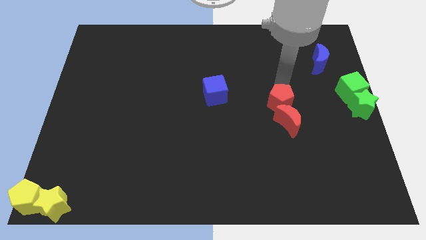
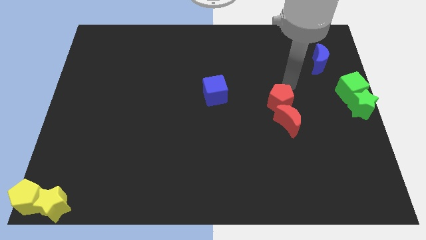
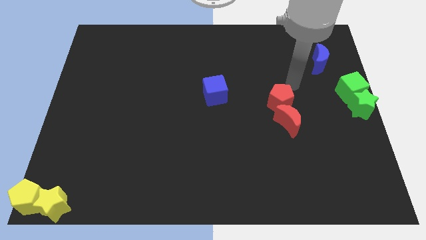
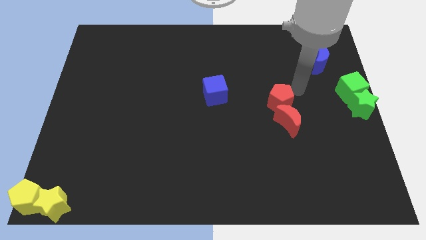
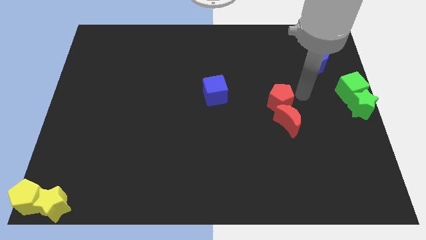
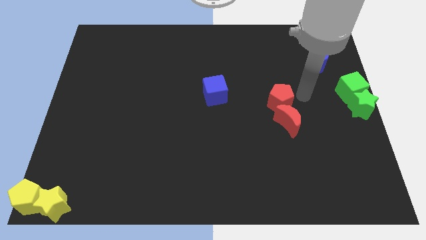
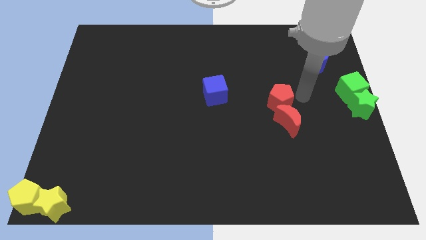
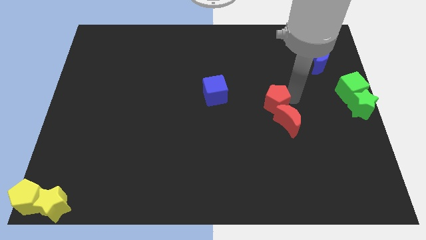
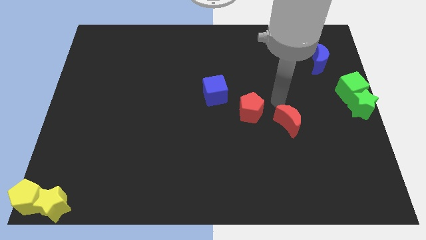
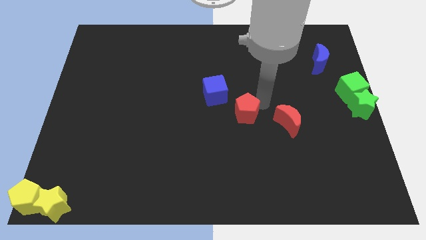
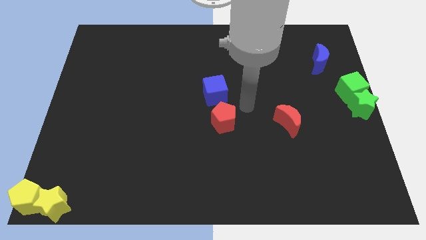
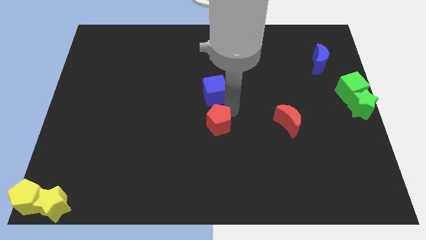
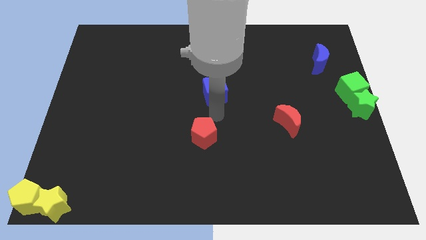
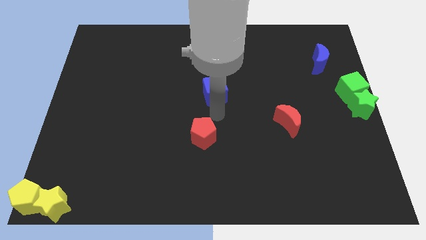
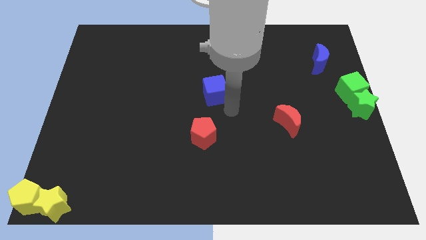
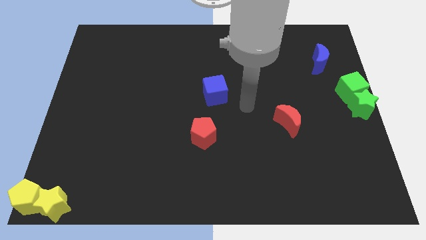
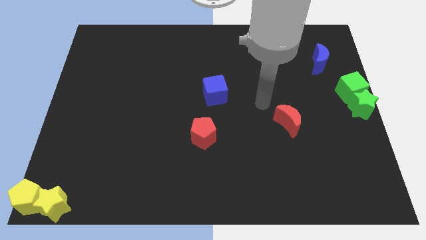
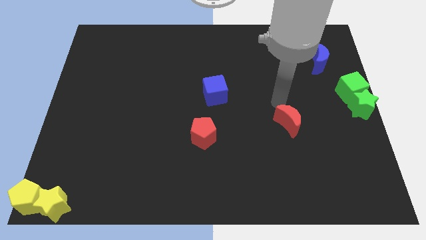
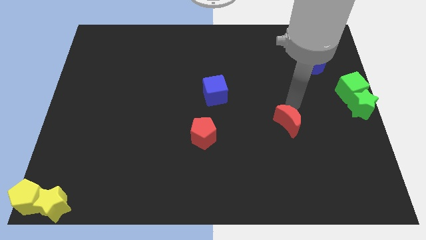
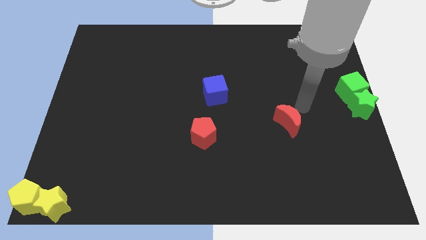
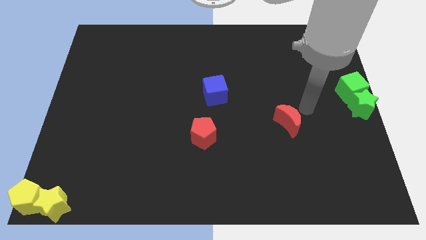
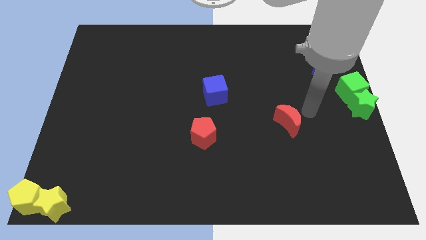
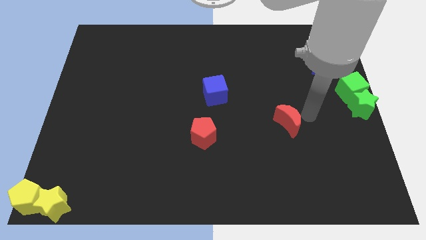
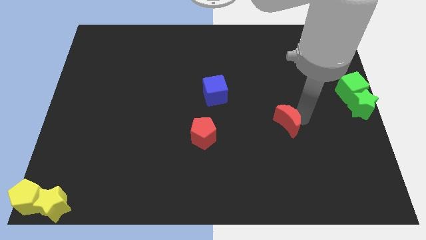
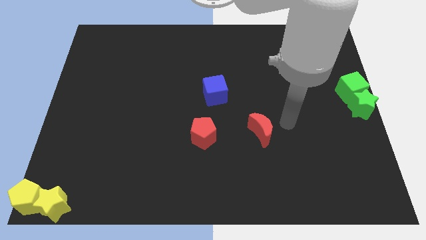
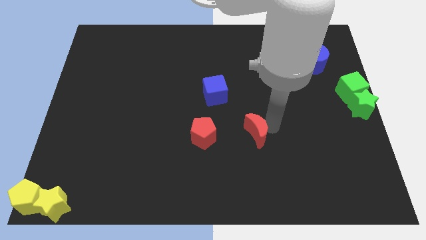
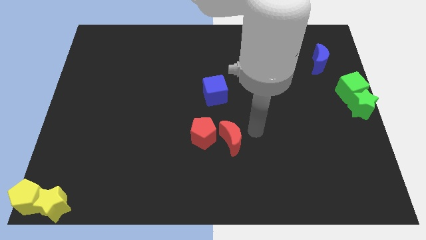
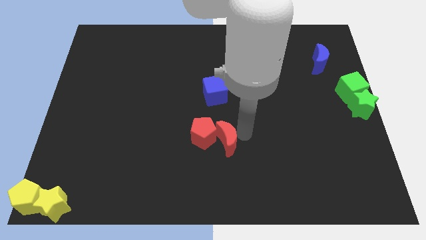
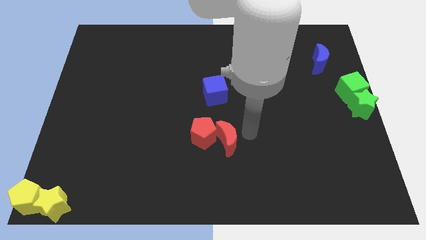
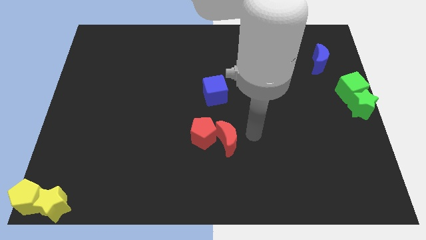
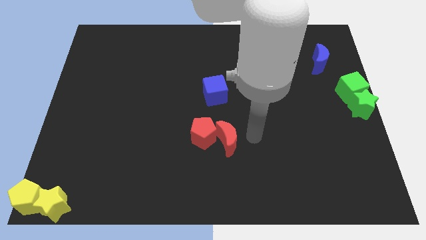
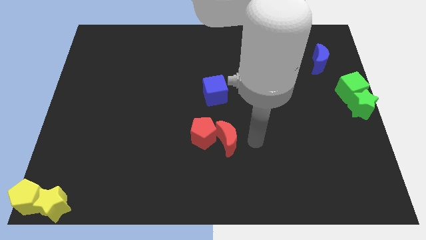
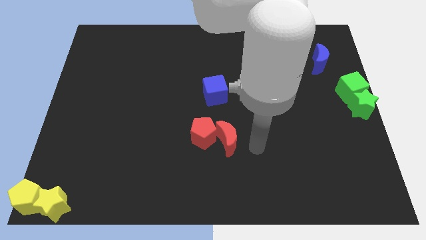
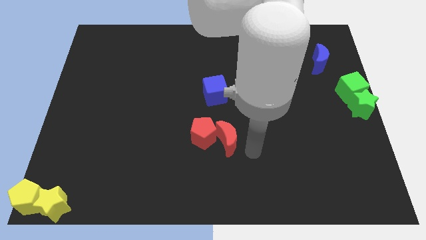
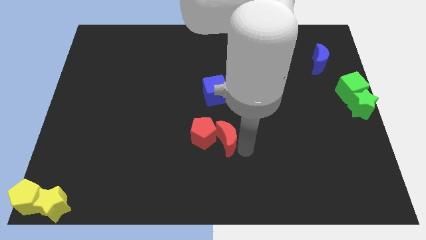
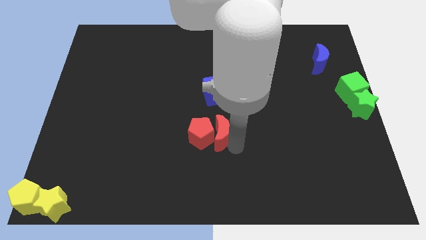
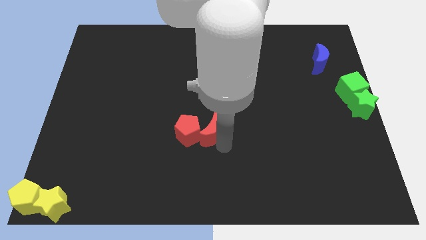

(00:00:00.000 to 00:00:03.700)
place red pentagon and red moon vertical to blue cube

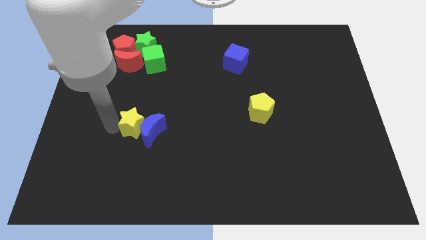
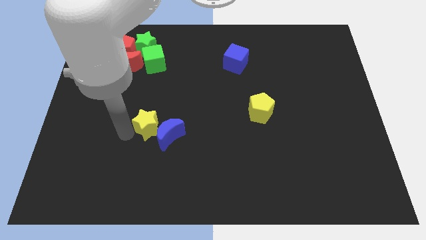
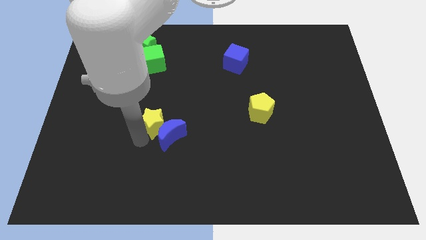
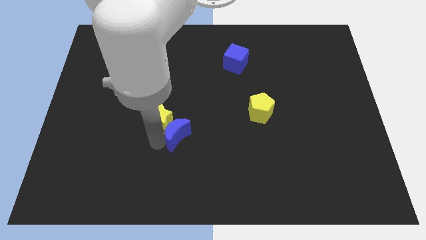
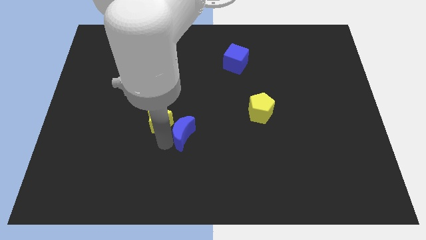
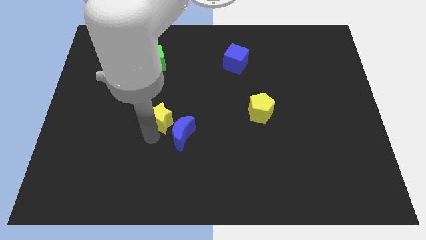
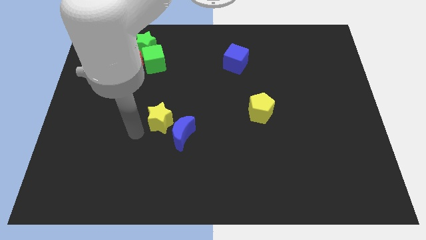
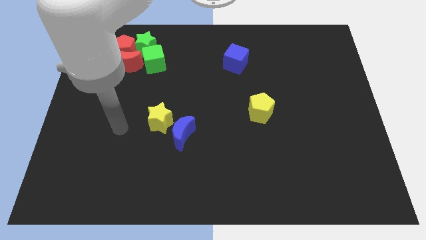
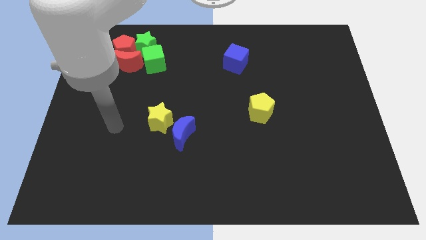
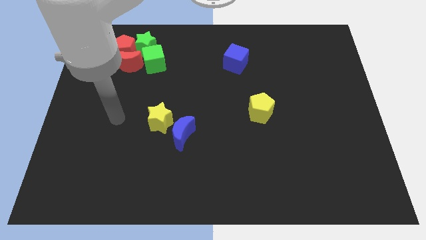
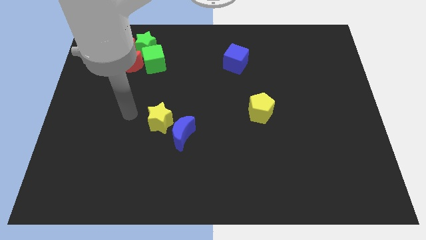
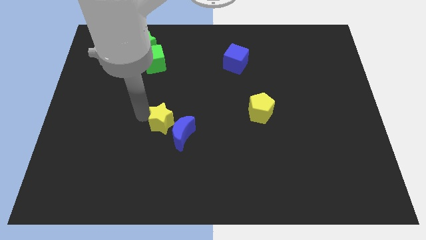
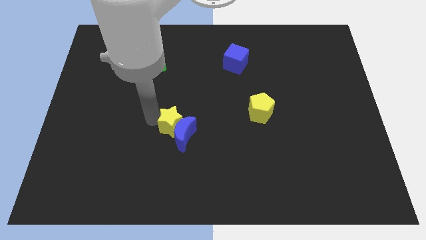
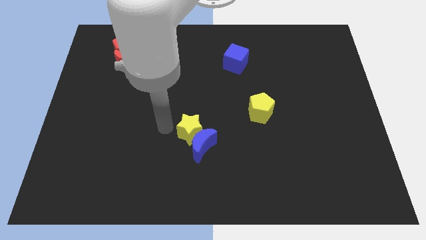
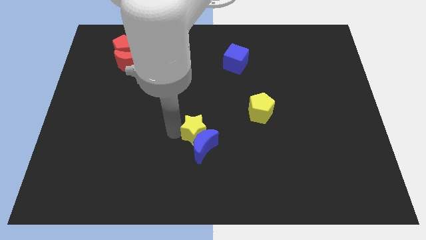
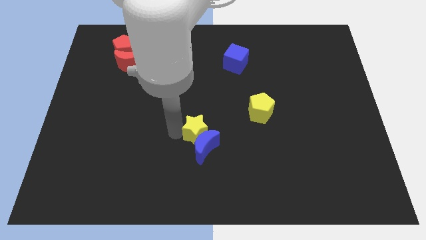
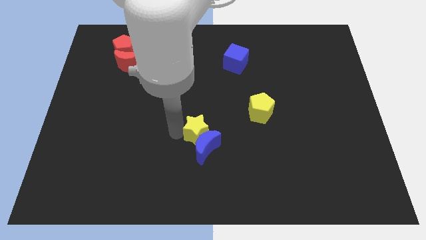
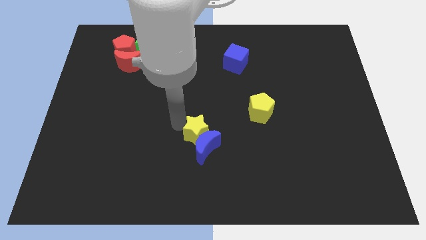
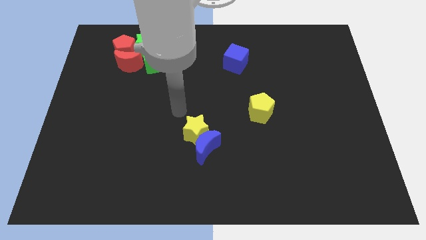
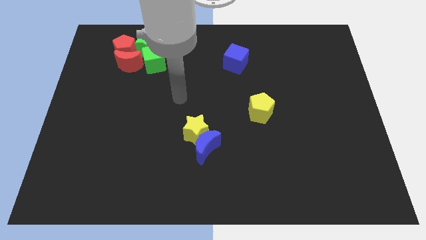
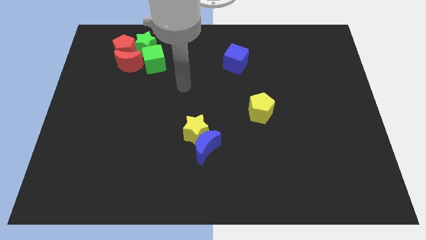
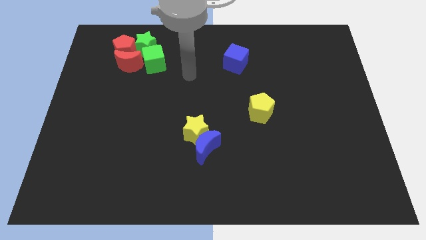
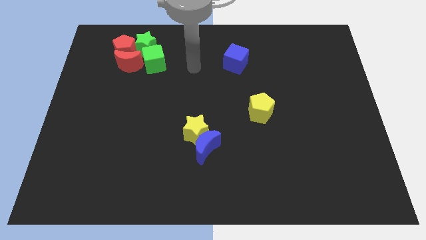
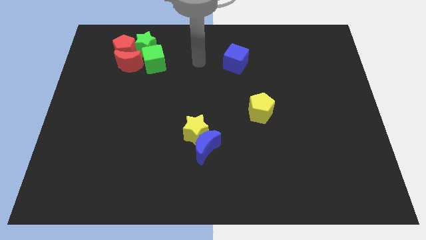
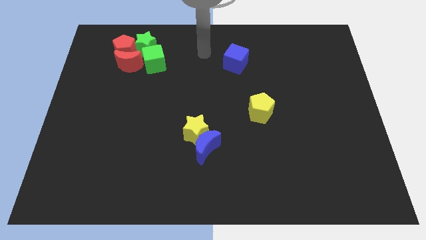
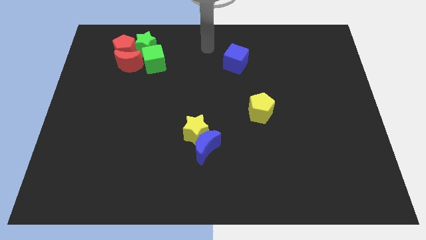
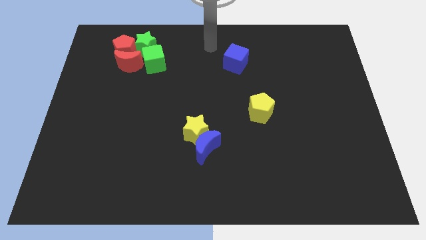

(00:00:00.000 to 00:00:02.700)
push yellow star and blue crescent towards right

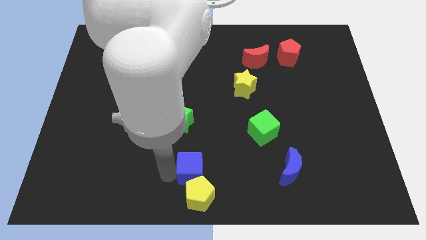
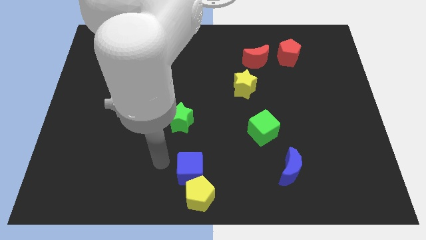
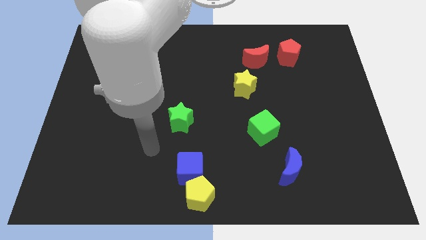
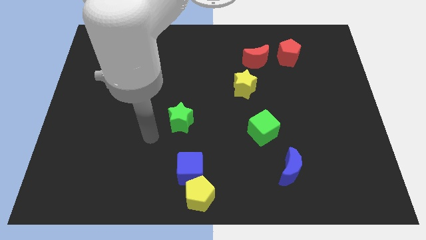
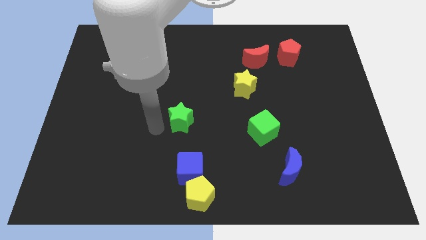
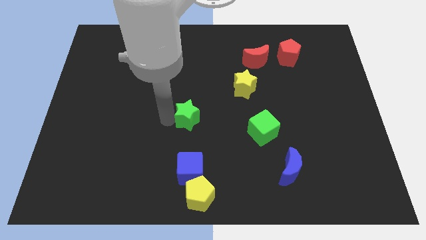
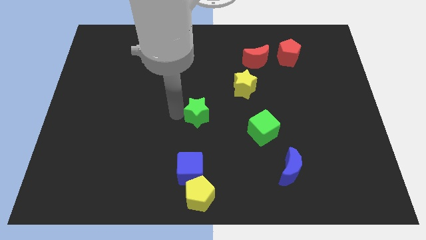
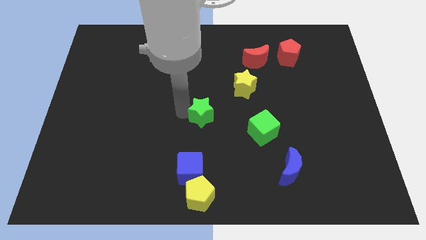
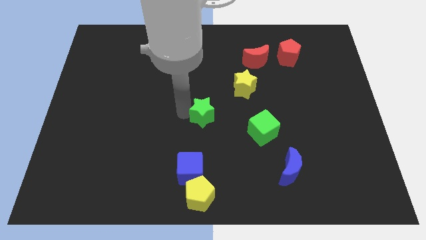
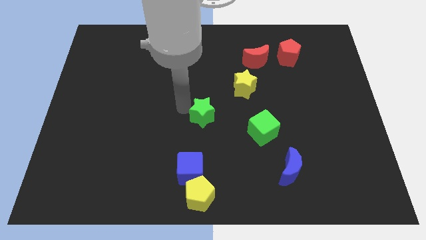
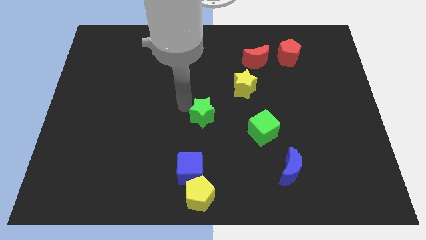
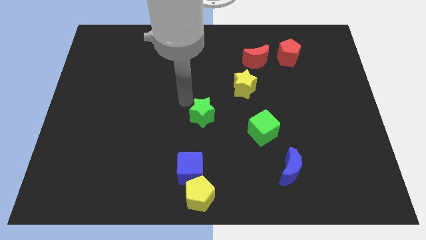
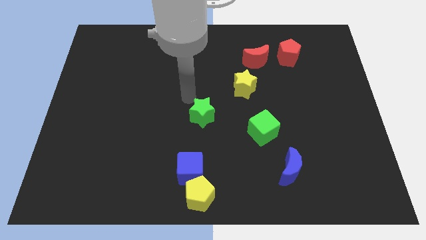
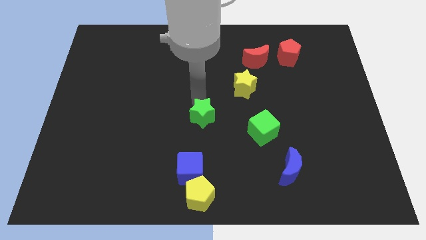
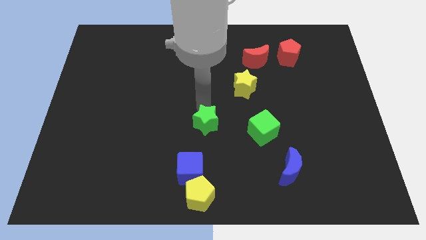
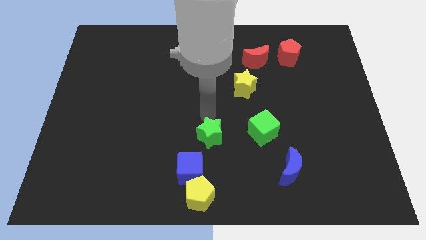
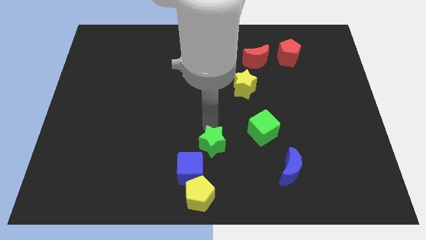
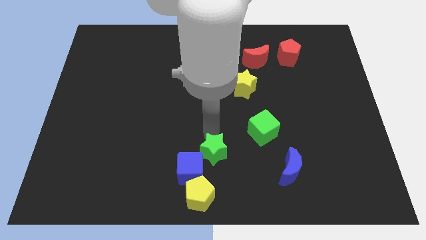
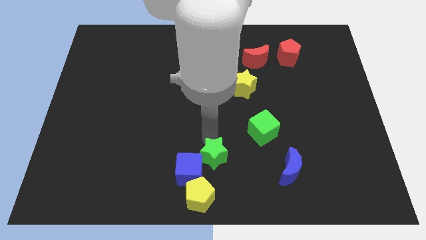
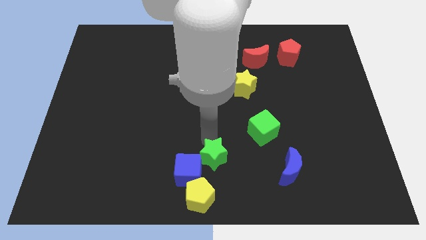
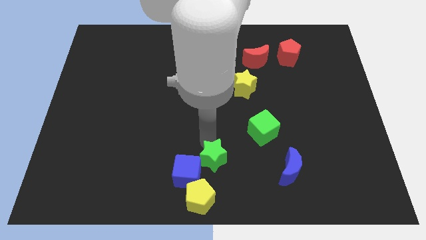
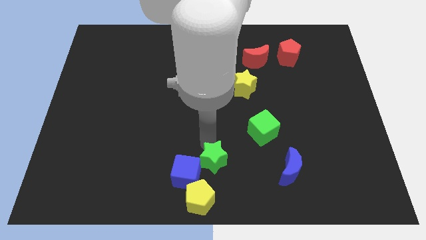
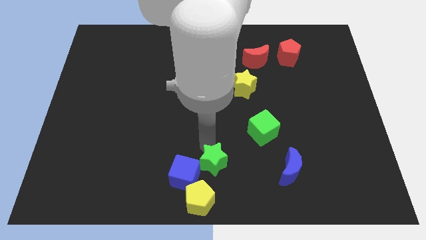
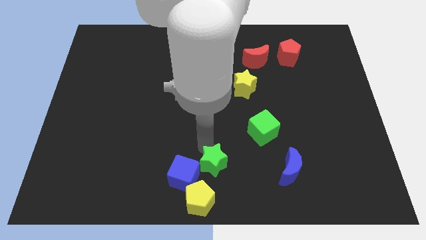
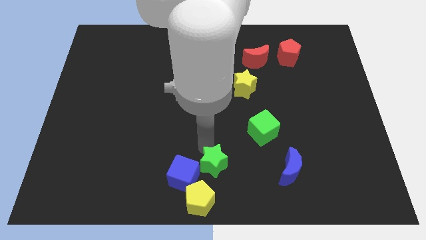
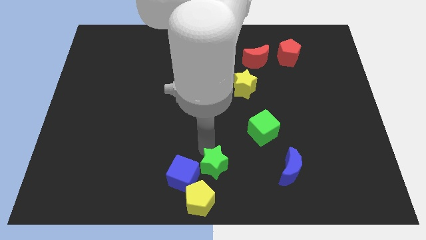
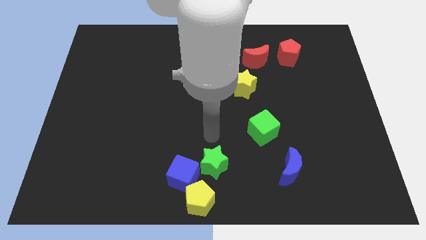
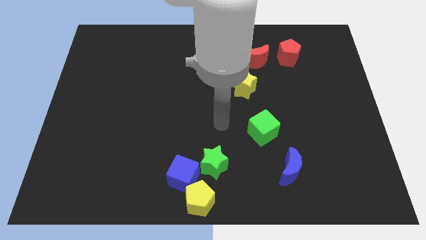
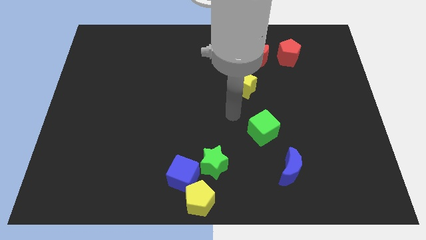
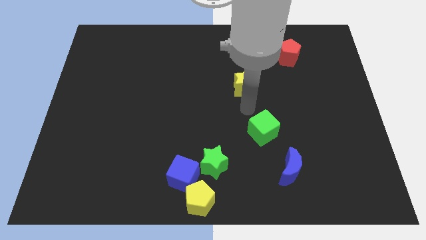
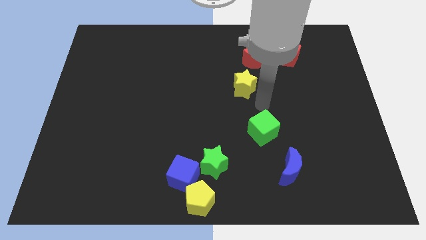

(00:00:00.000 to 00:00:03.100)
place the green star in between the green cube and blue cube
